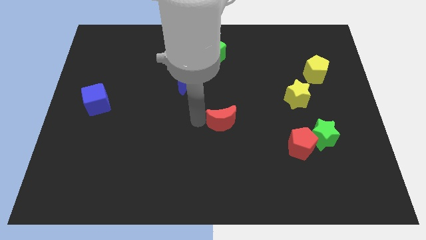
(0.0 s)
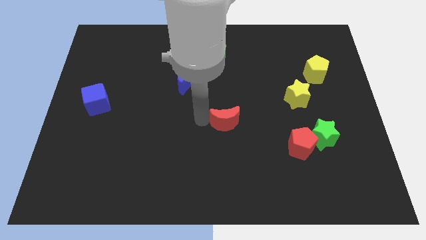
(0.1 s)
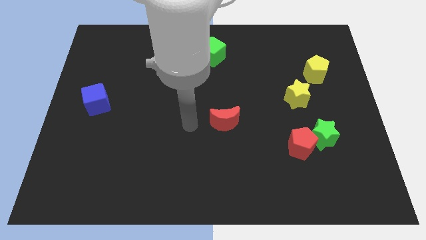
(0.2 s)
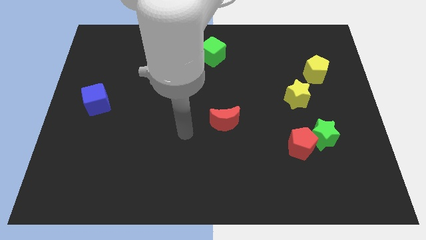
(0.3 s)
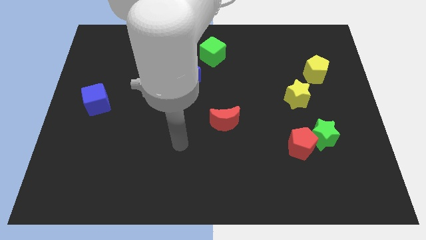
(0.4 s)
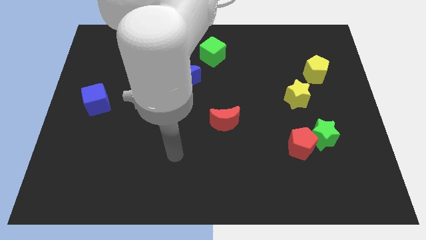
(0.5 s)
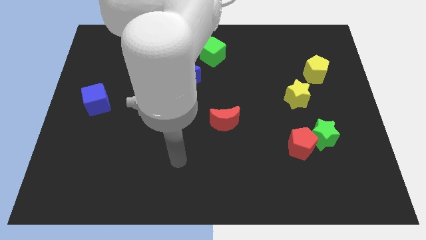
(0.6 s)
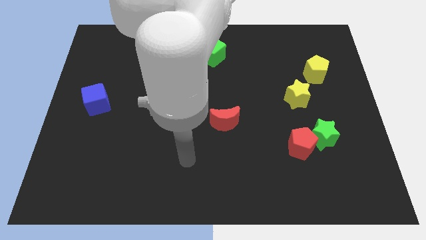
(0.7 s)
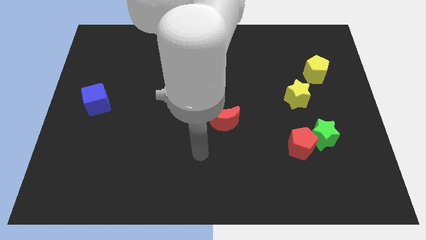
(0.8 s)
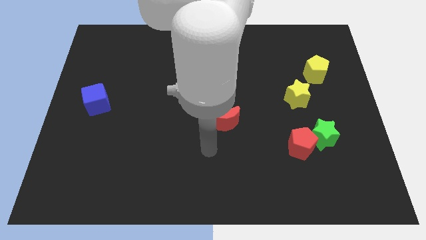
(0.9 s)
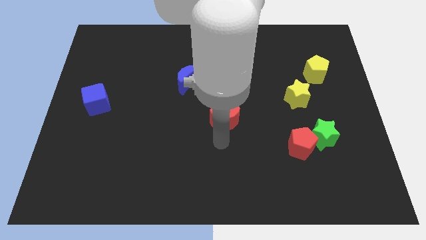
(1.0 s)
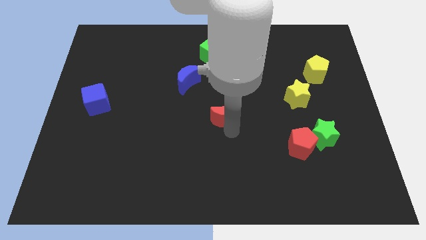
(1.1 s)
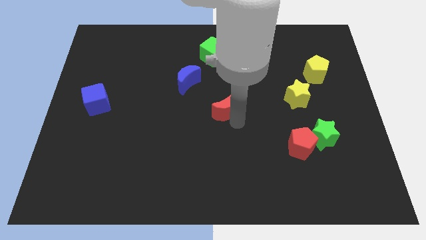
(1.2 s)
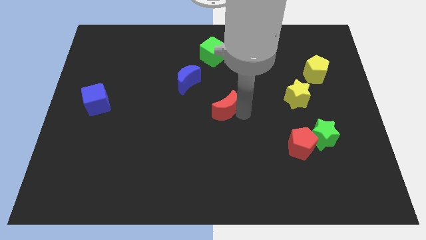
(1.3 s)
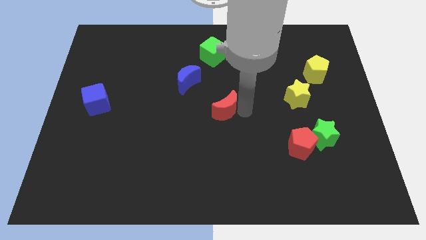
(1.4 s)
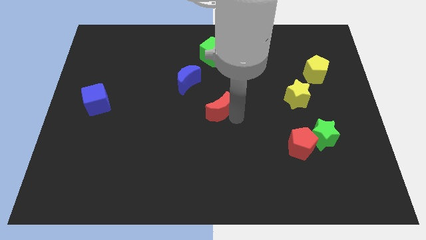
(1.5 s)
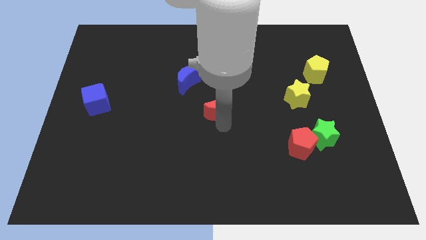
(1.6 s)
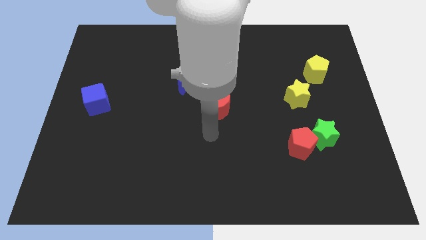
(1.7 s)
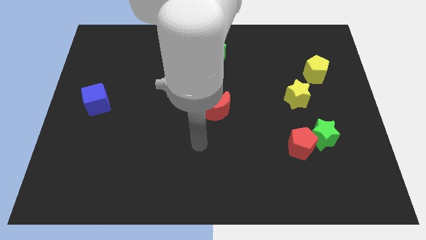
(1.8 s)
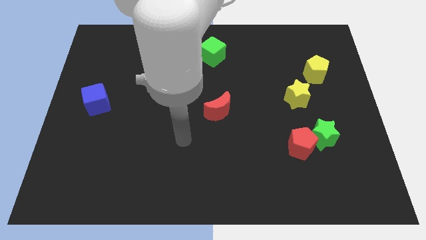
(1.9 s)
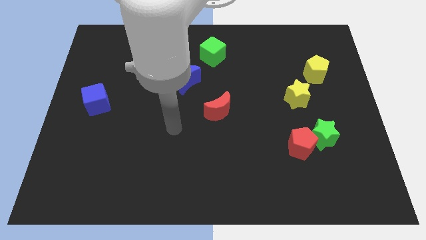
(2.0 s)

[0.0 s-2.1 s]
adjust the red crescent vertically below the green cube

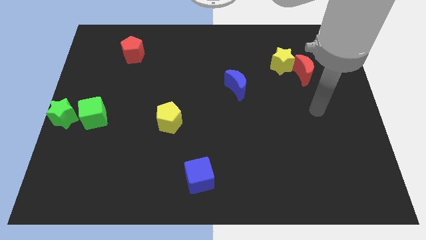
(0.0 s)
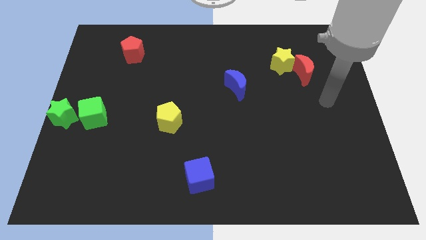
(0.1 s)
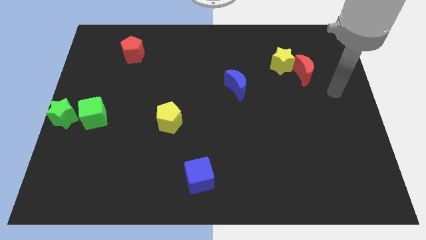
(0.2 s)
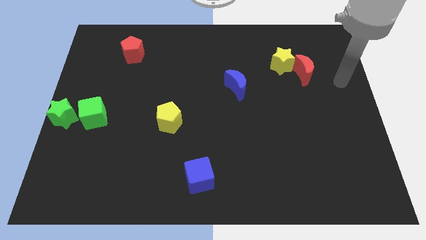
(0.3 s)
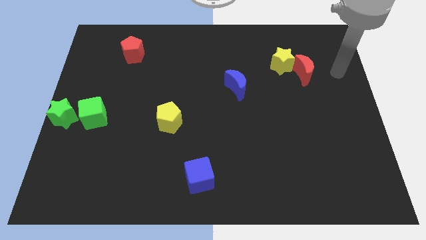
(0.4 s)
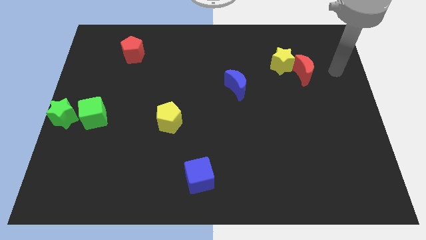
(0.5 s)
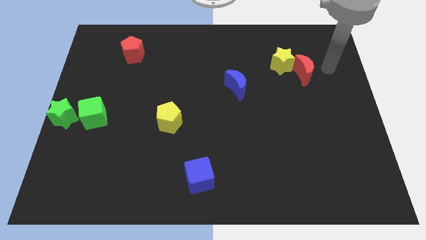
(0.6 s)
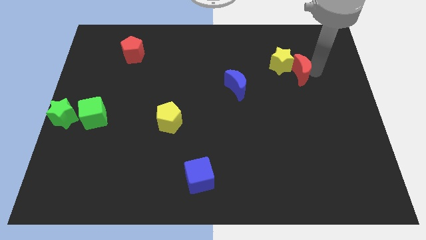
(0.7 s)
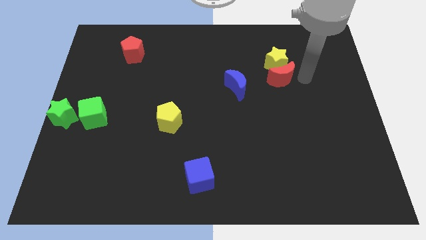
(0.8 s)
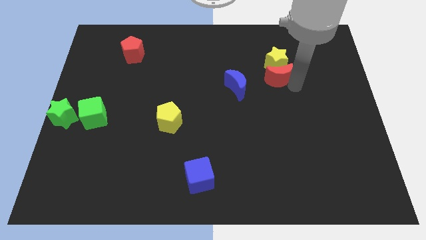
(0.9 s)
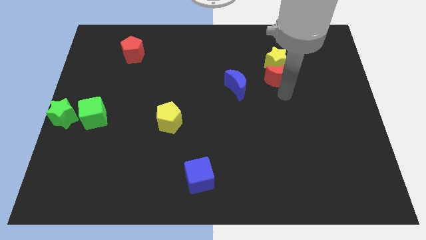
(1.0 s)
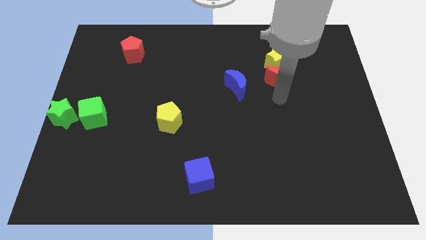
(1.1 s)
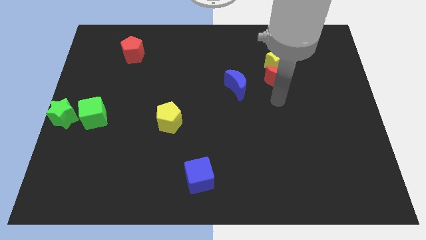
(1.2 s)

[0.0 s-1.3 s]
put the red crescent to the bottom side of the yellow star

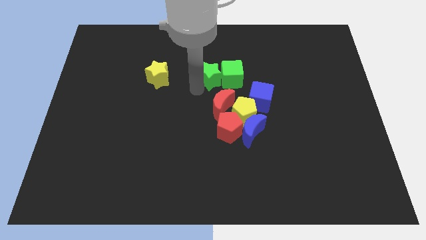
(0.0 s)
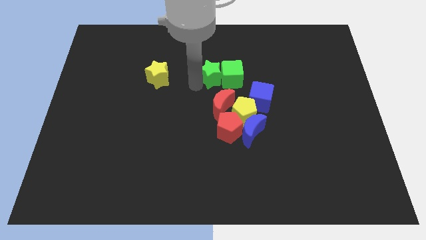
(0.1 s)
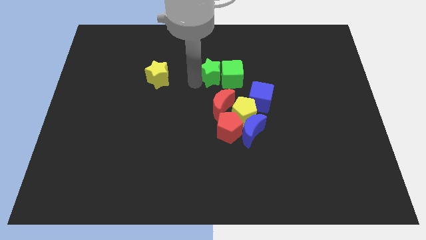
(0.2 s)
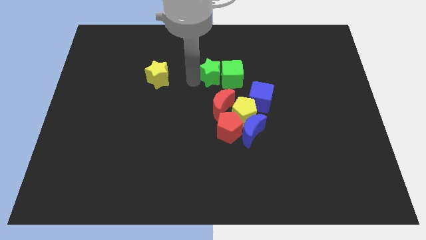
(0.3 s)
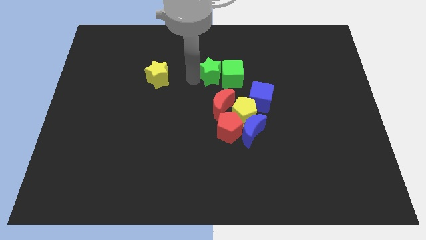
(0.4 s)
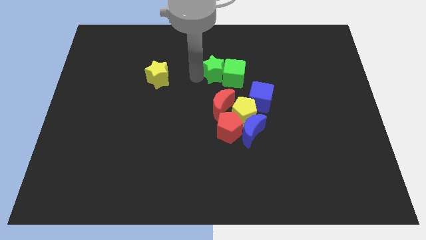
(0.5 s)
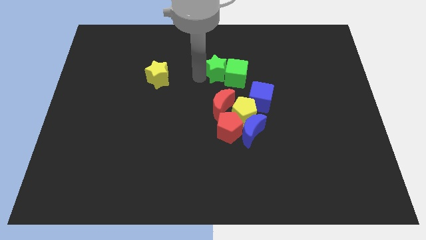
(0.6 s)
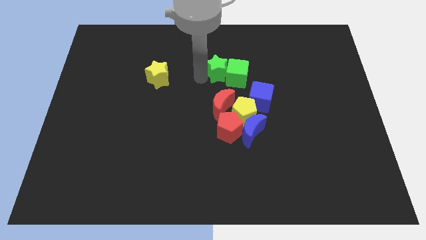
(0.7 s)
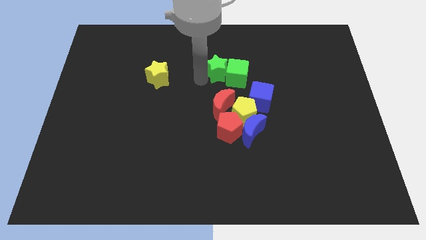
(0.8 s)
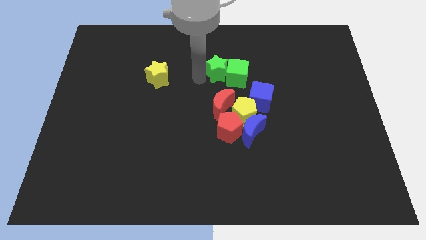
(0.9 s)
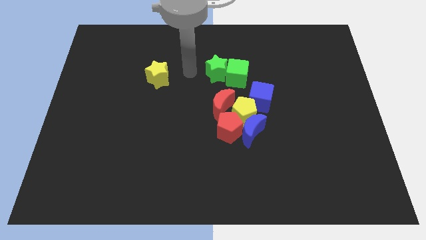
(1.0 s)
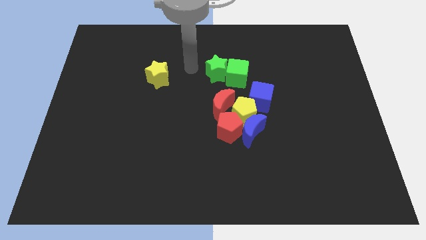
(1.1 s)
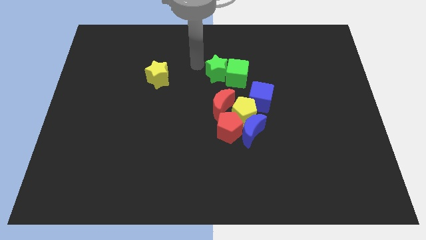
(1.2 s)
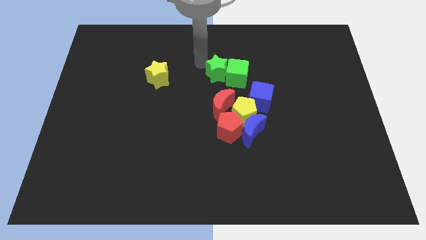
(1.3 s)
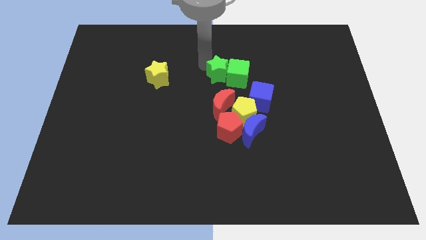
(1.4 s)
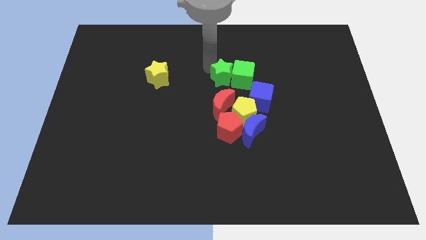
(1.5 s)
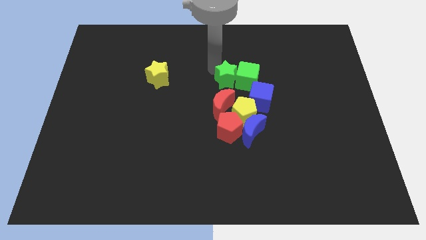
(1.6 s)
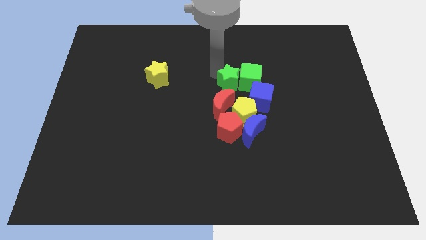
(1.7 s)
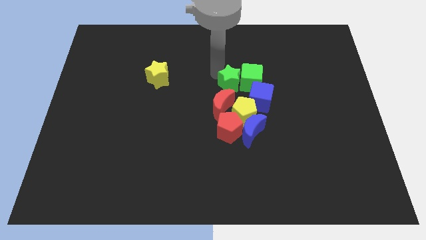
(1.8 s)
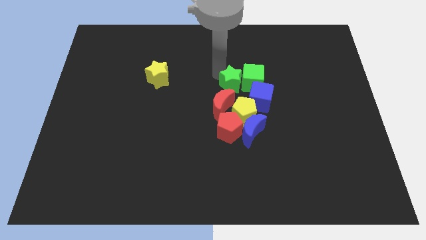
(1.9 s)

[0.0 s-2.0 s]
move the green blocks to the top of the group of blocks

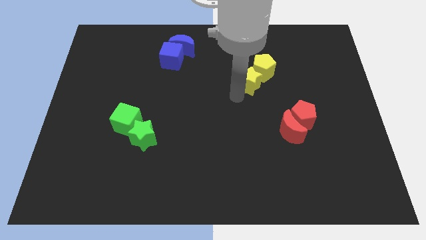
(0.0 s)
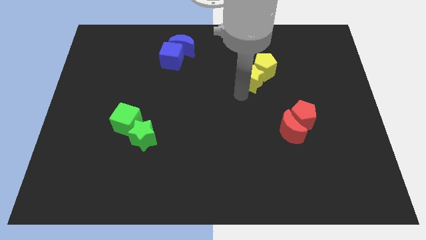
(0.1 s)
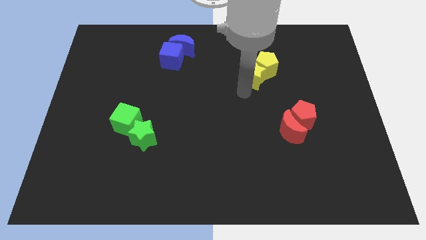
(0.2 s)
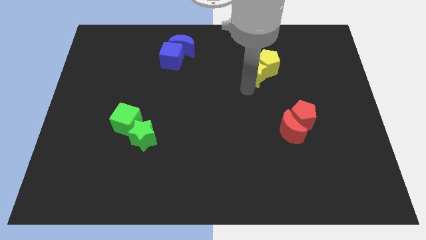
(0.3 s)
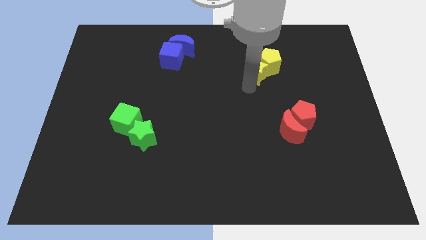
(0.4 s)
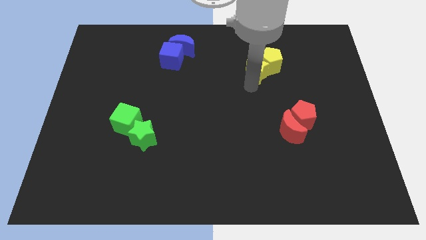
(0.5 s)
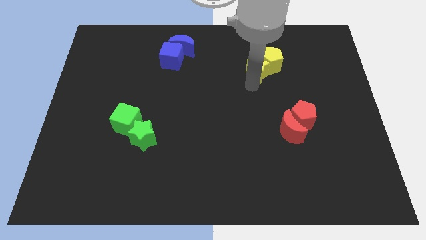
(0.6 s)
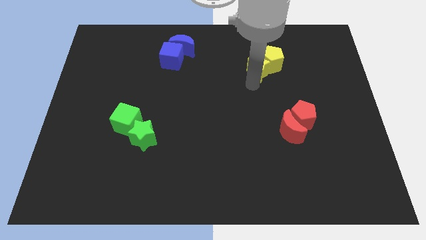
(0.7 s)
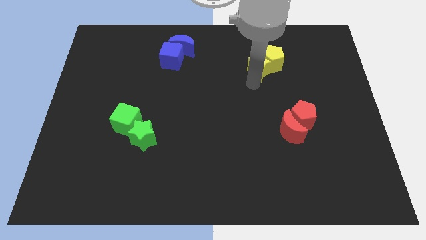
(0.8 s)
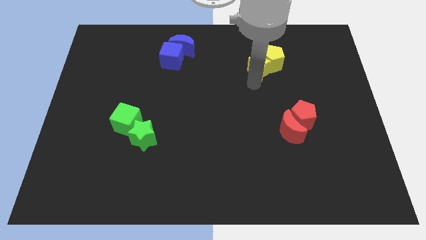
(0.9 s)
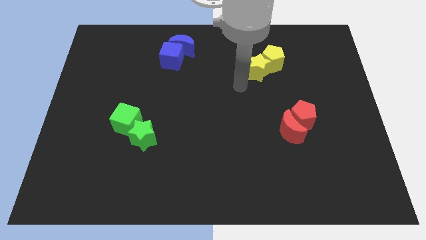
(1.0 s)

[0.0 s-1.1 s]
move the yellow pentagon and yellow star towards the top right

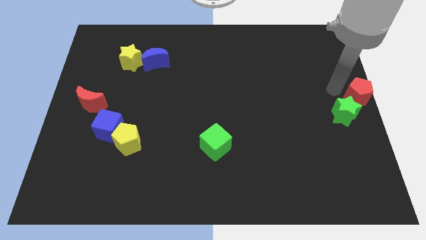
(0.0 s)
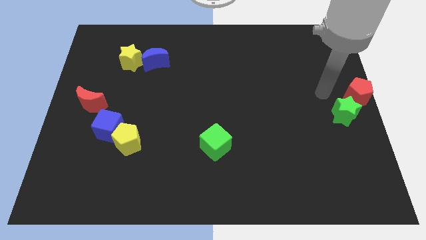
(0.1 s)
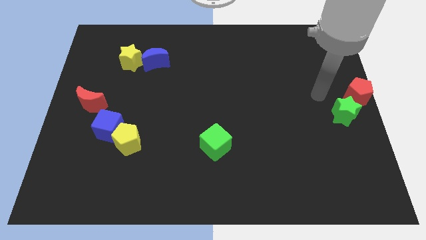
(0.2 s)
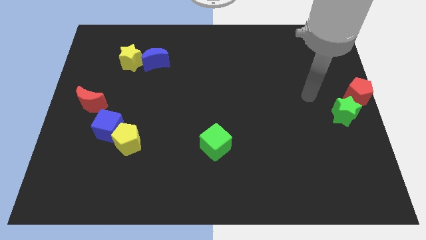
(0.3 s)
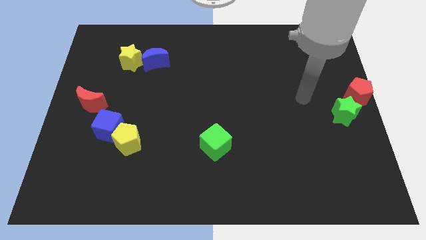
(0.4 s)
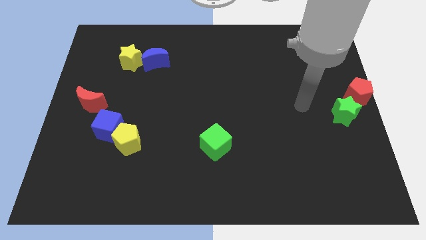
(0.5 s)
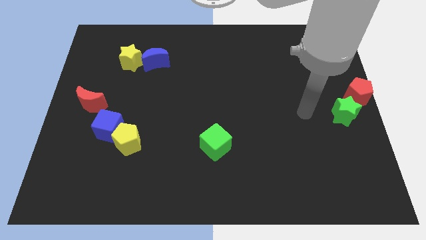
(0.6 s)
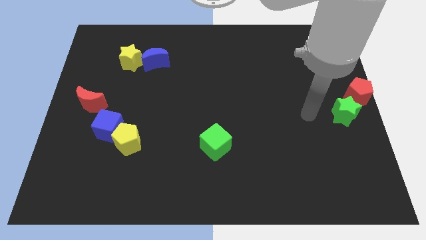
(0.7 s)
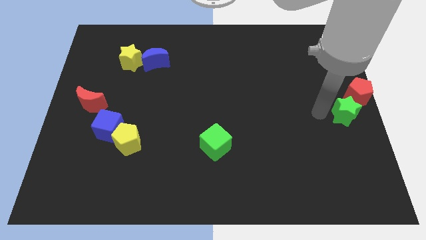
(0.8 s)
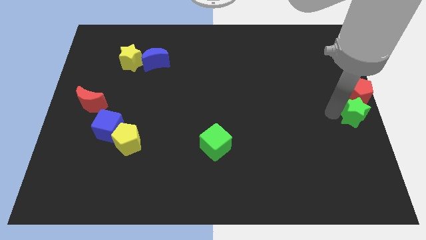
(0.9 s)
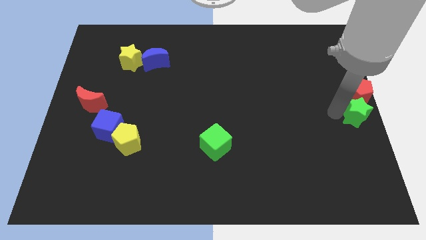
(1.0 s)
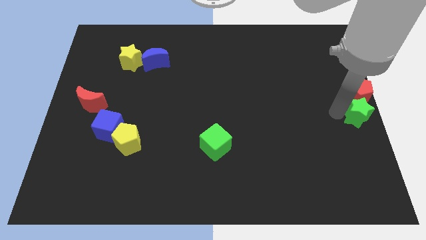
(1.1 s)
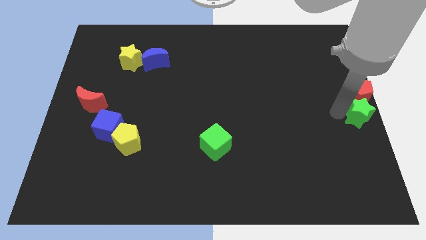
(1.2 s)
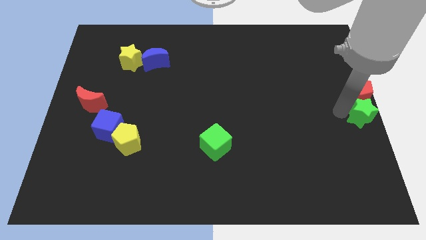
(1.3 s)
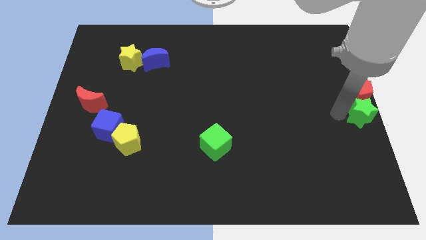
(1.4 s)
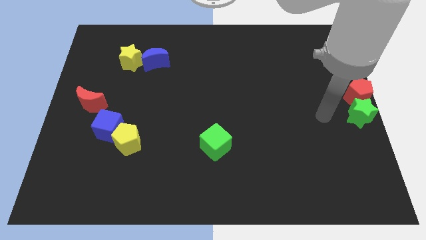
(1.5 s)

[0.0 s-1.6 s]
push the green star to the bottom of the red pentagon

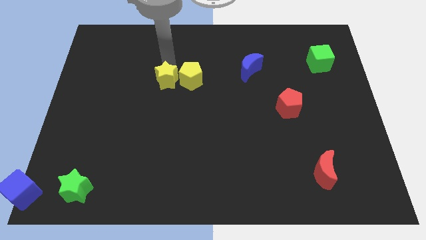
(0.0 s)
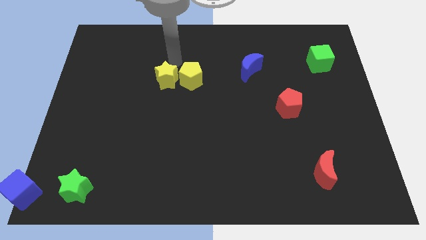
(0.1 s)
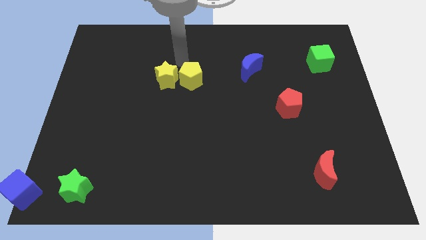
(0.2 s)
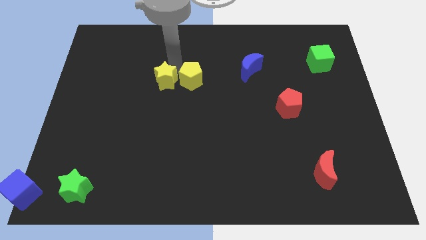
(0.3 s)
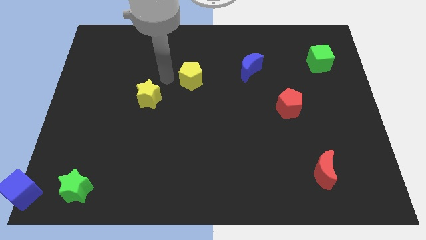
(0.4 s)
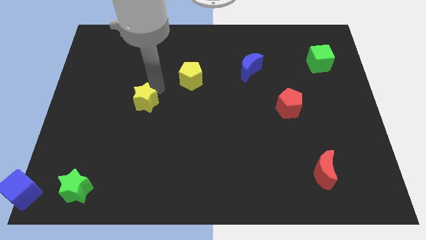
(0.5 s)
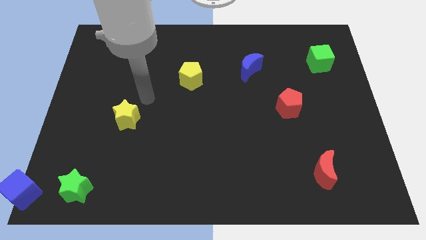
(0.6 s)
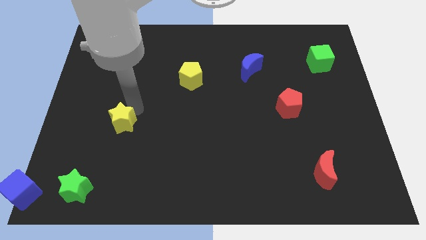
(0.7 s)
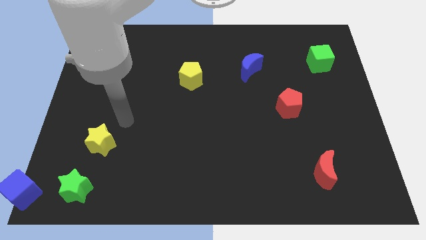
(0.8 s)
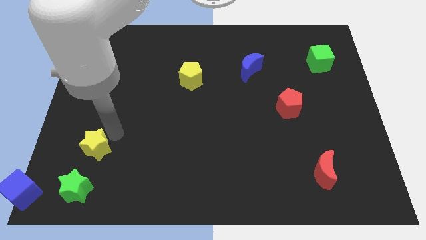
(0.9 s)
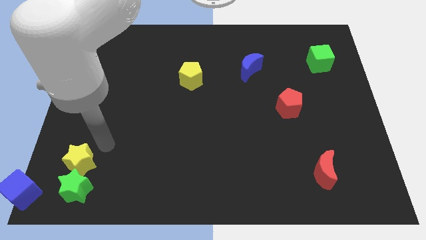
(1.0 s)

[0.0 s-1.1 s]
separate yellow star from yellow pentagon
